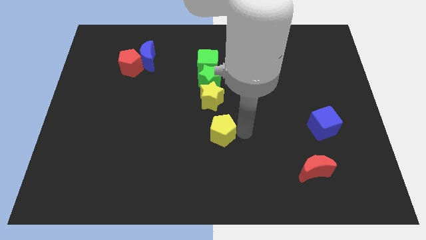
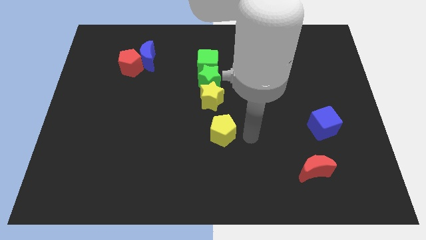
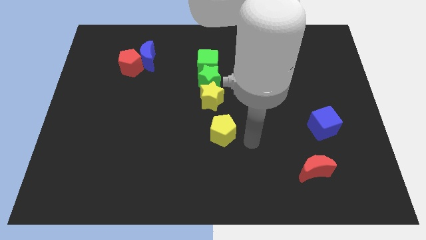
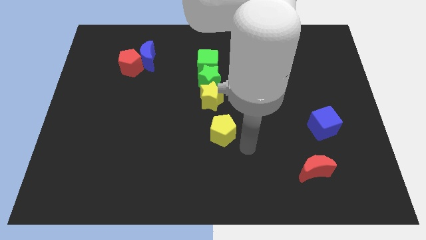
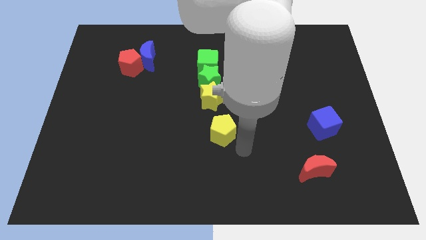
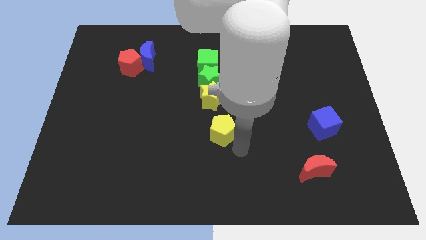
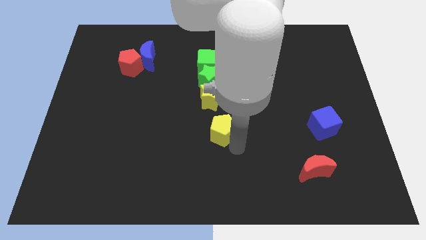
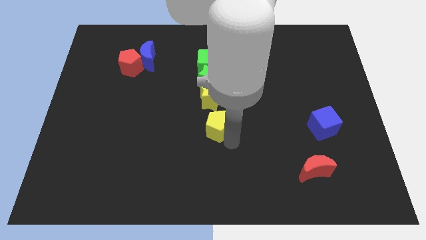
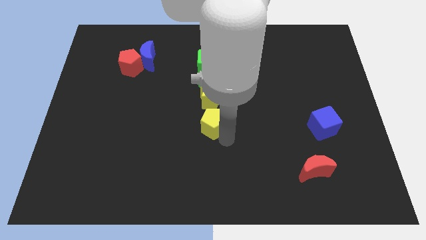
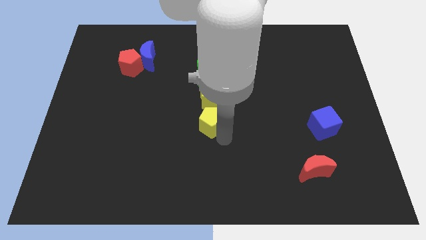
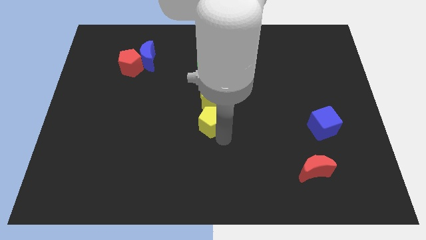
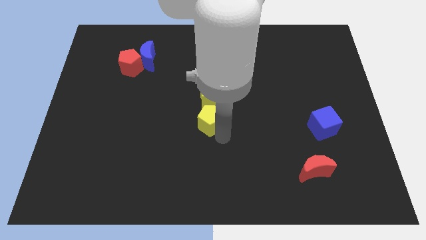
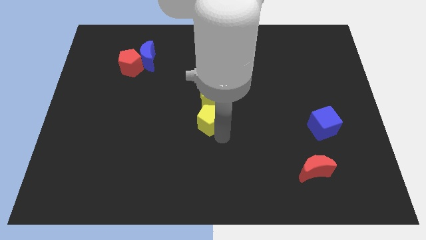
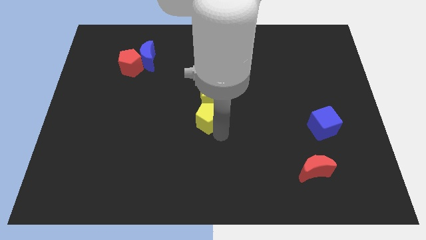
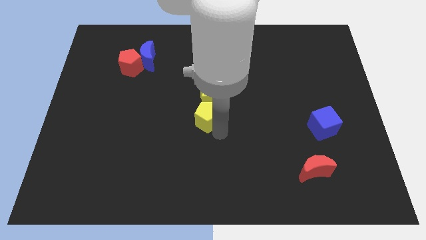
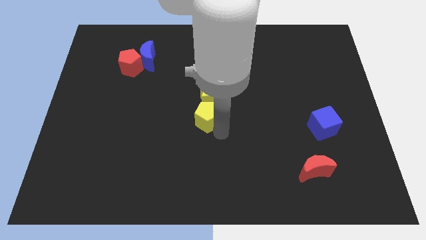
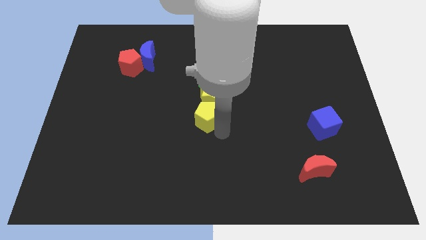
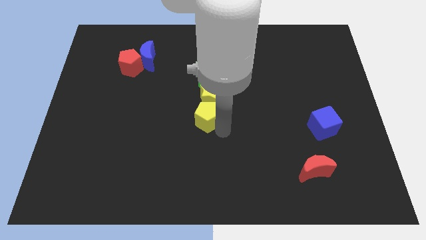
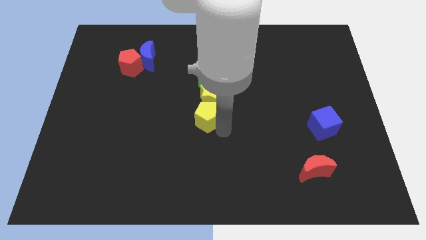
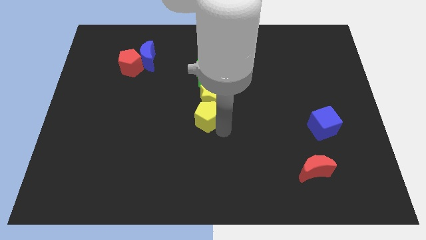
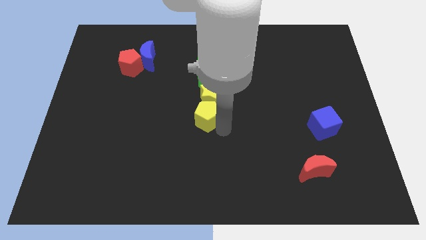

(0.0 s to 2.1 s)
place the yellow pentagon diagonally to red pentagon and blue crescent

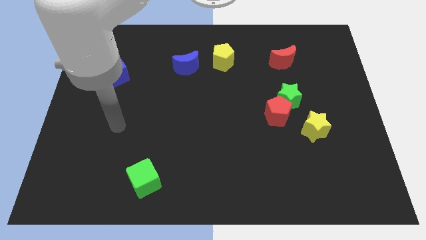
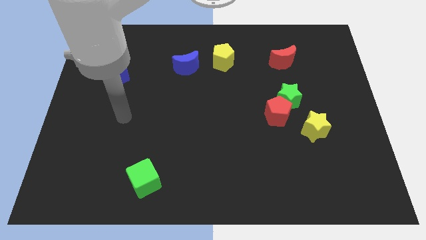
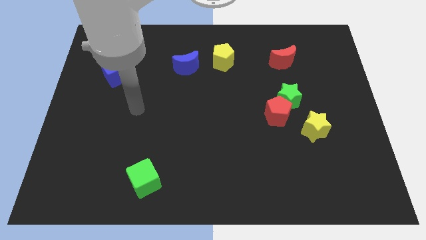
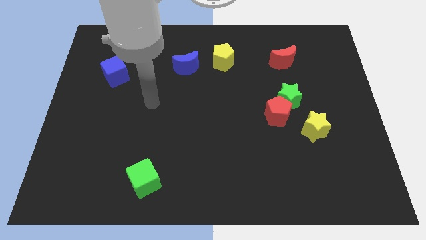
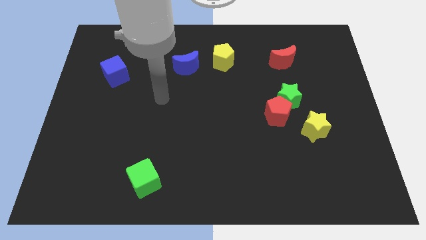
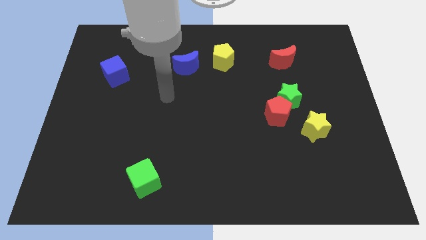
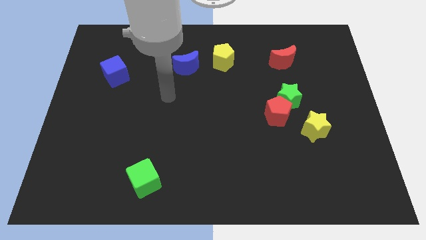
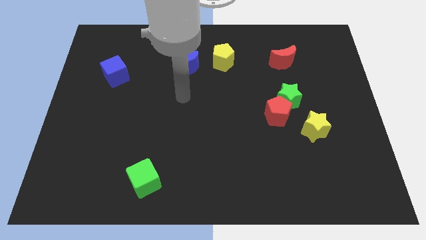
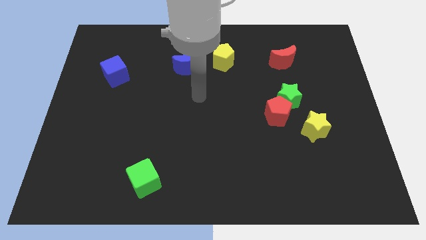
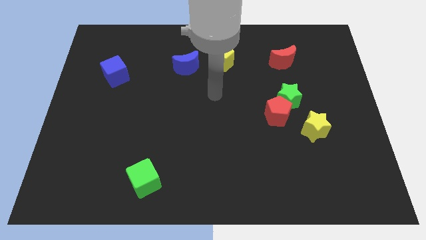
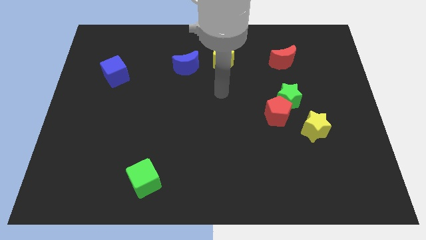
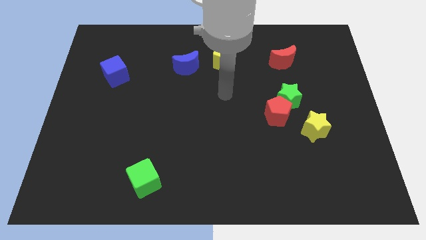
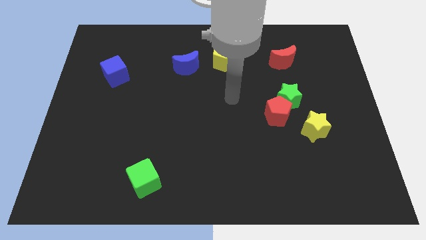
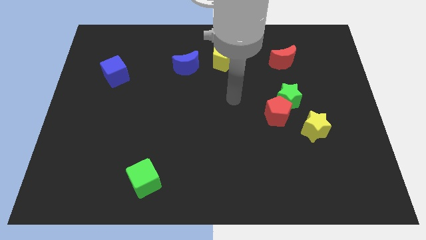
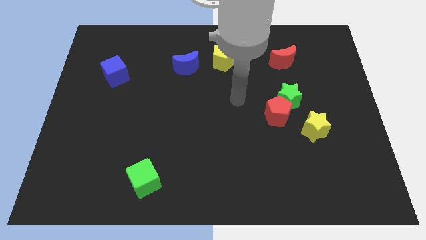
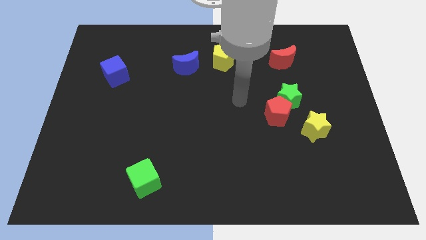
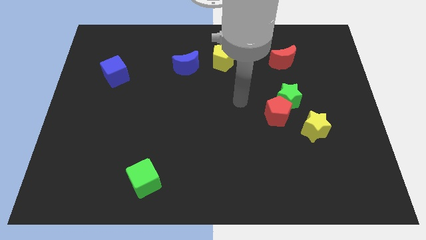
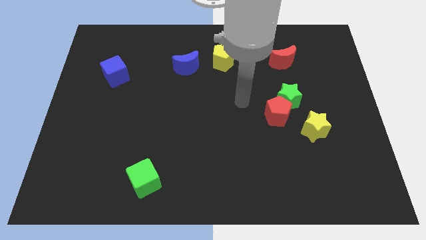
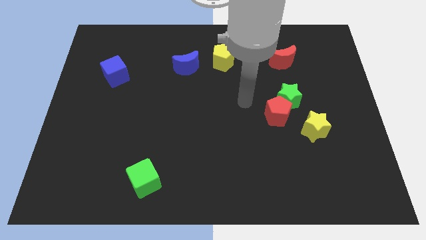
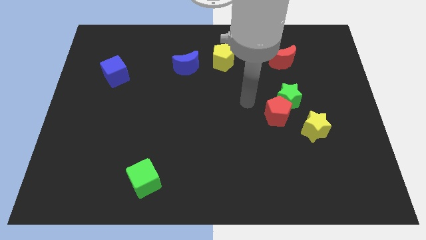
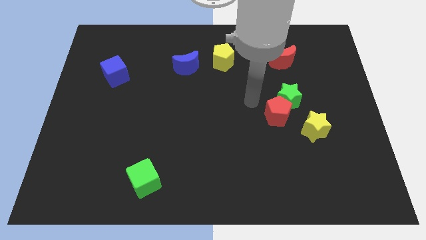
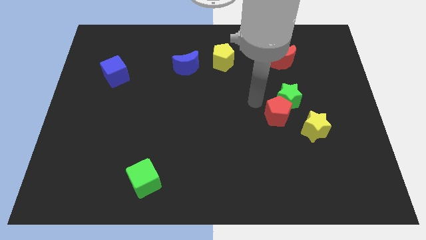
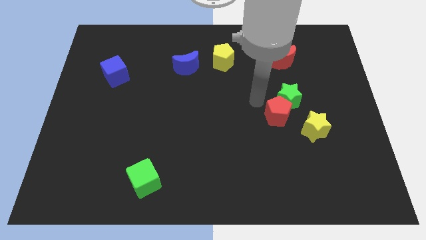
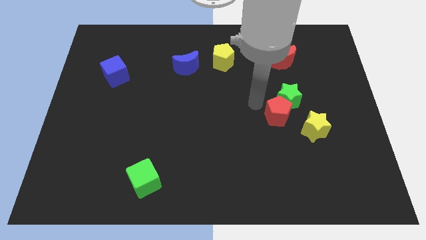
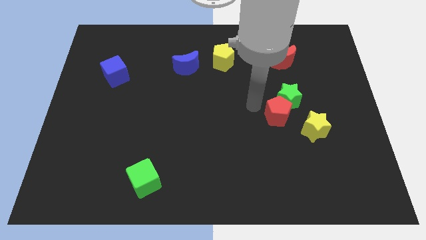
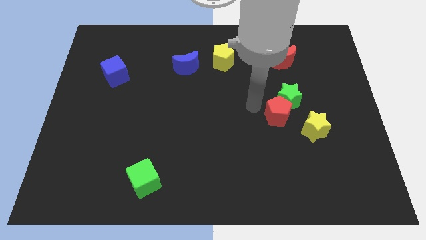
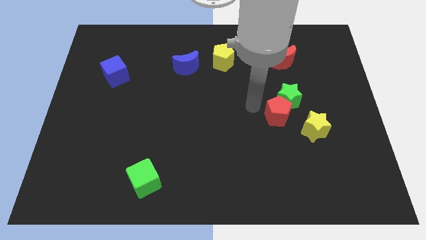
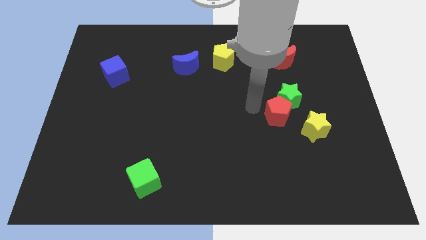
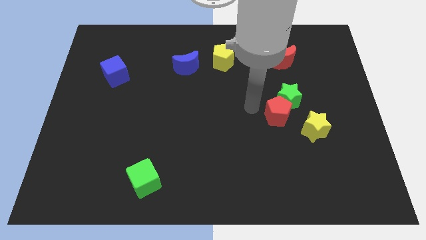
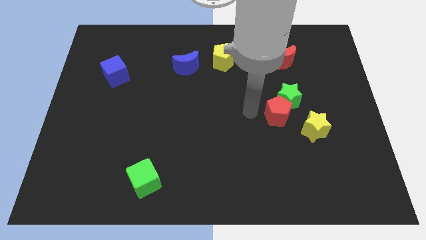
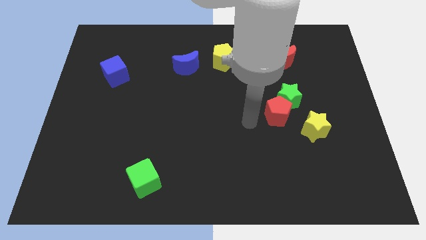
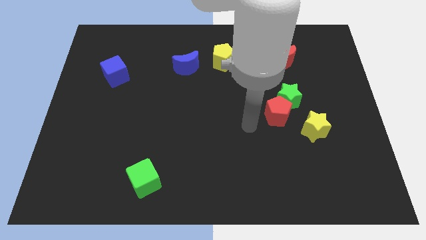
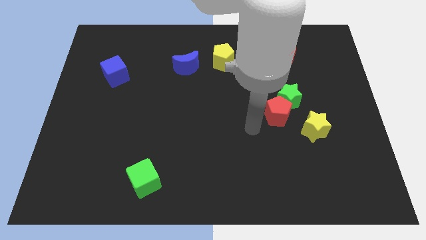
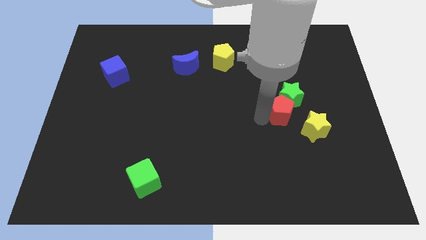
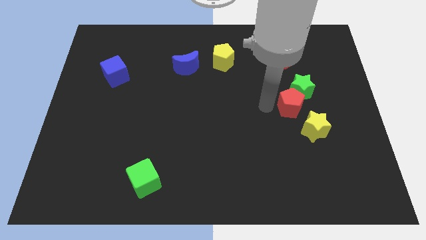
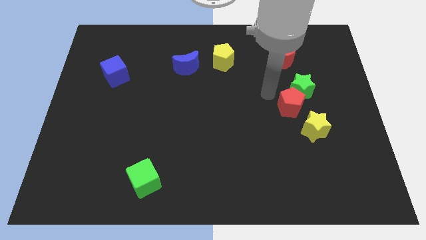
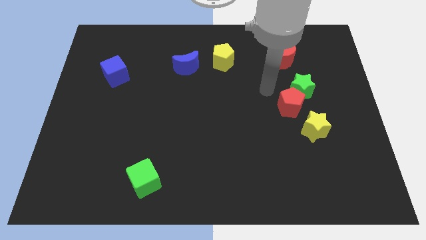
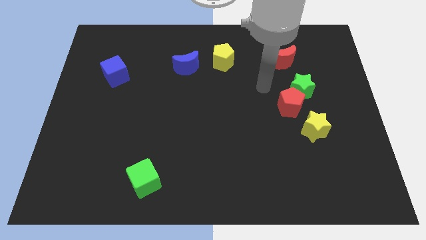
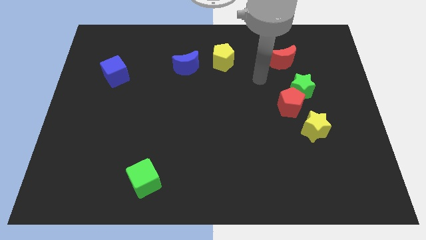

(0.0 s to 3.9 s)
move the red pentagon and the green star to the top right of the board

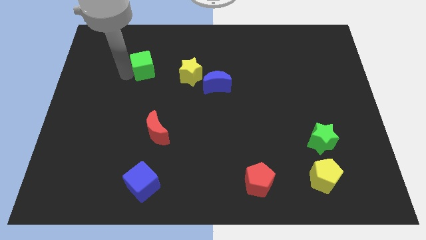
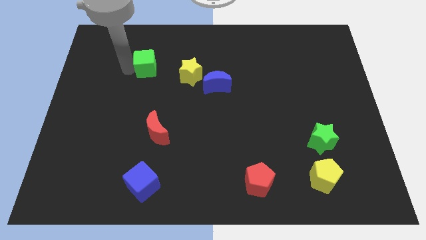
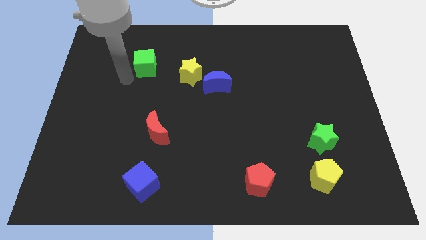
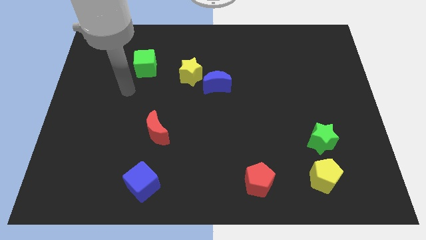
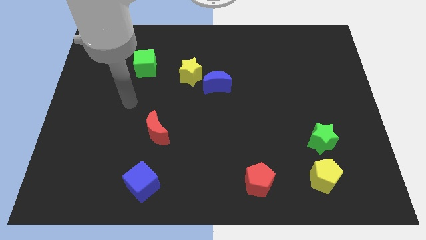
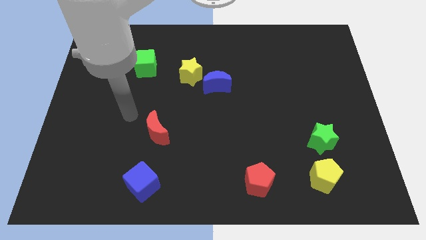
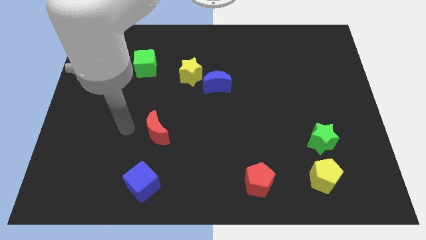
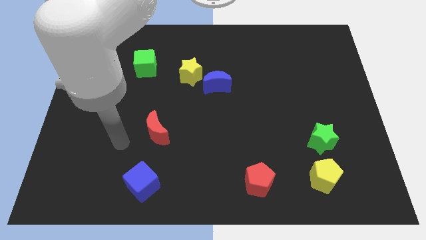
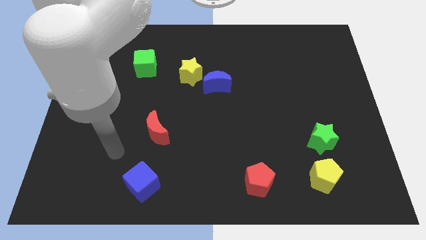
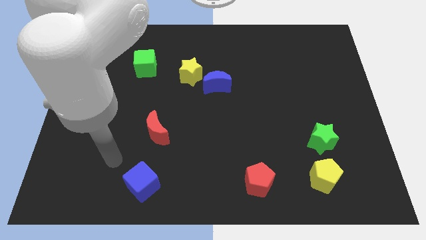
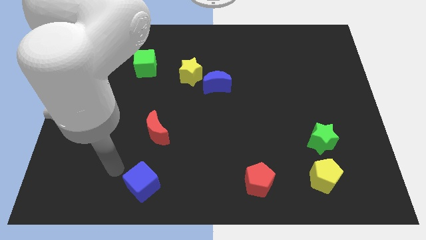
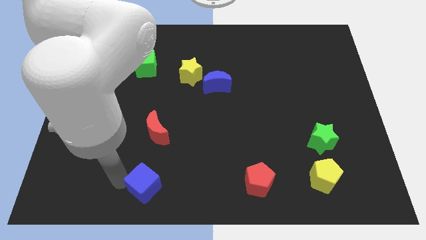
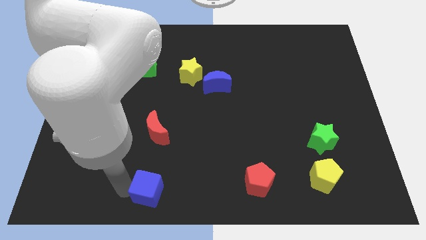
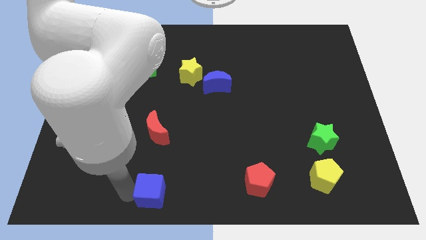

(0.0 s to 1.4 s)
move your arm left to the blue cube

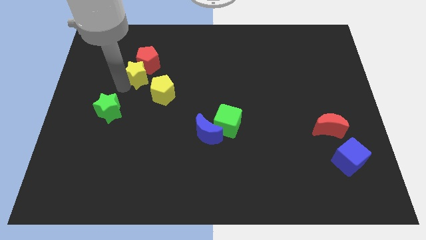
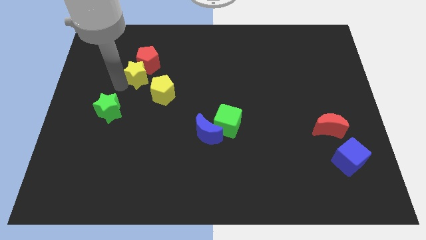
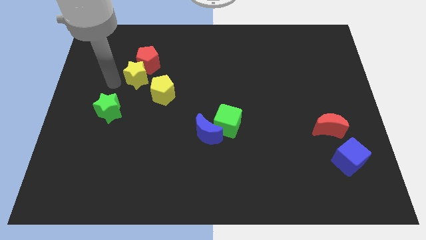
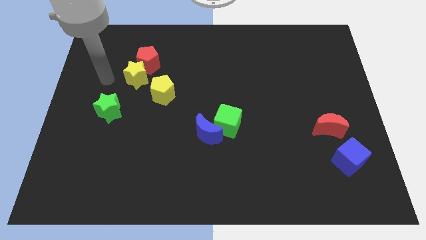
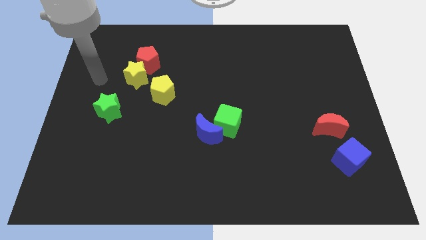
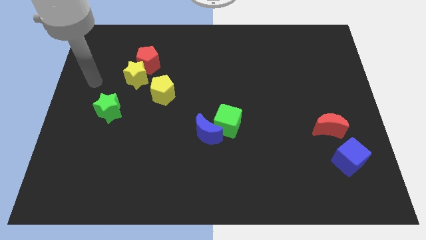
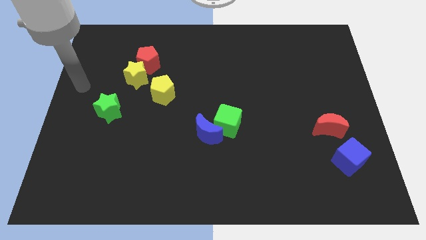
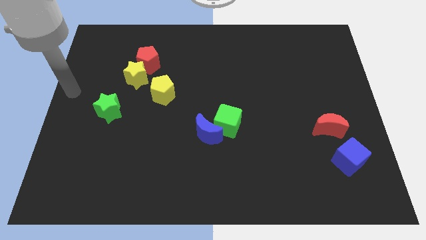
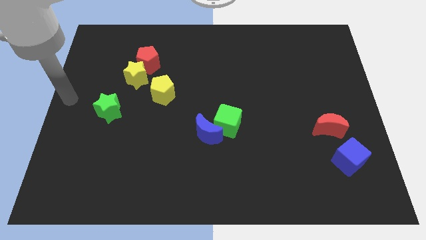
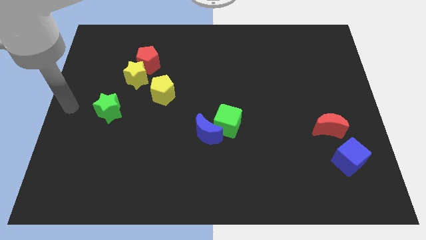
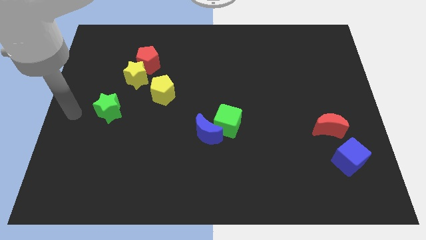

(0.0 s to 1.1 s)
move the arm to the left side of the green star

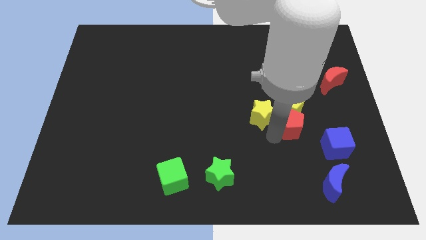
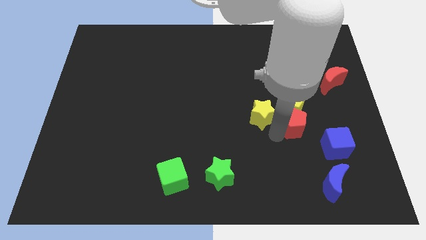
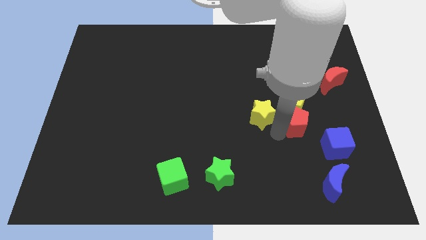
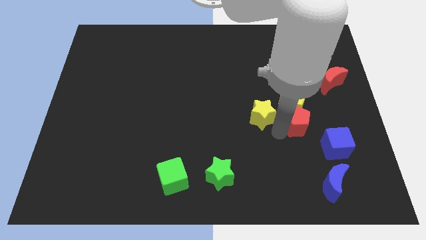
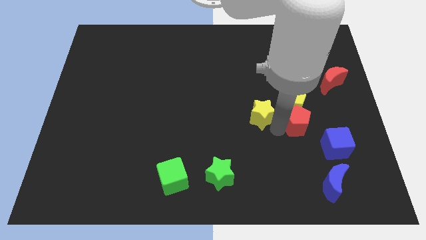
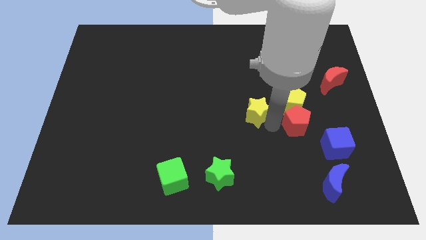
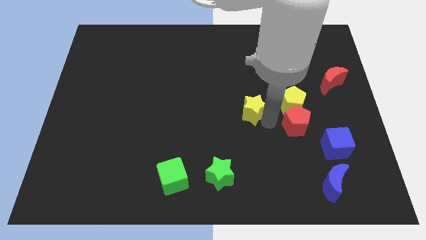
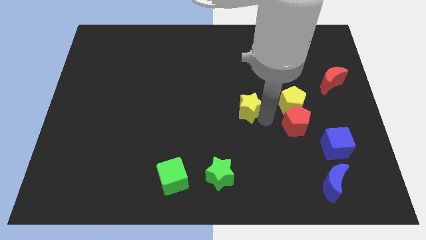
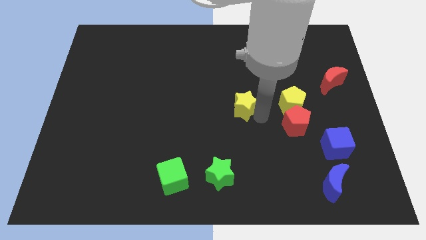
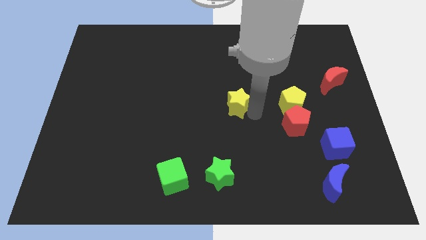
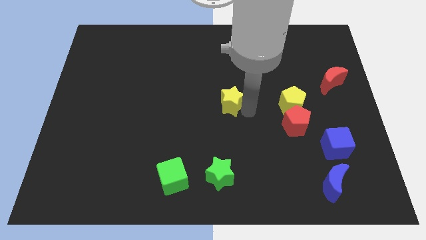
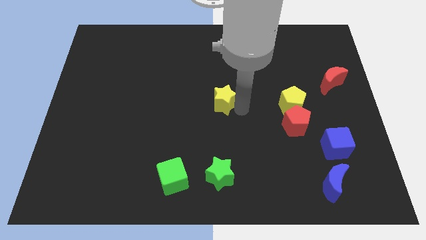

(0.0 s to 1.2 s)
separate the yellow star from the red pentagon
